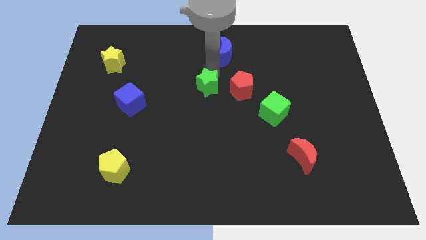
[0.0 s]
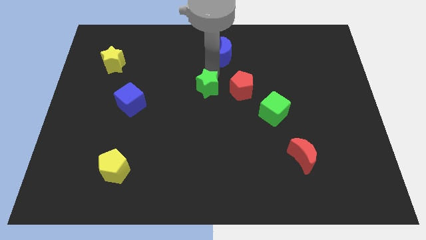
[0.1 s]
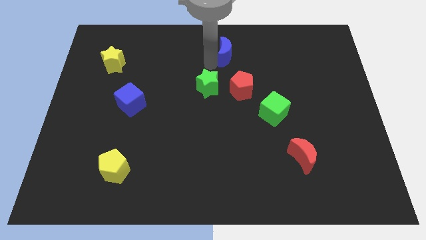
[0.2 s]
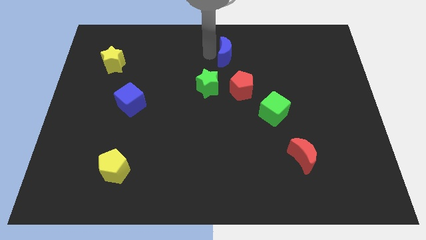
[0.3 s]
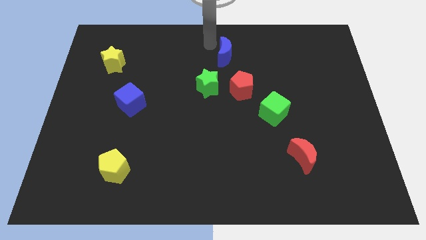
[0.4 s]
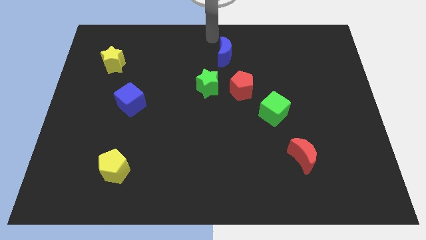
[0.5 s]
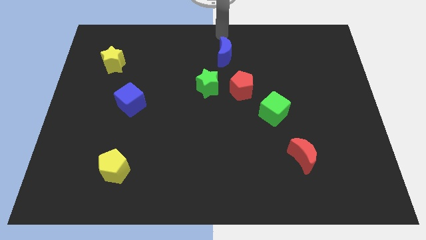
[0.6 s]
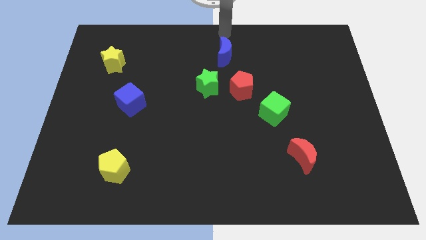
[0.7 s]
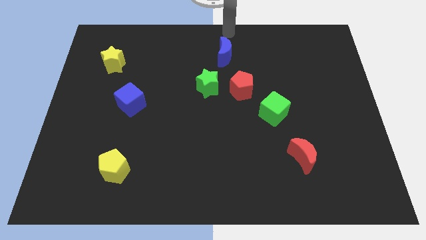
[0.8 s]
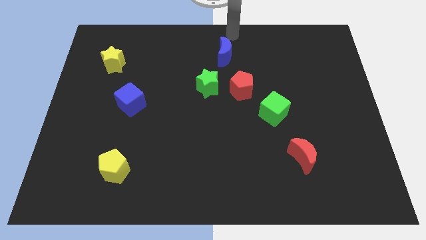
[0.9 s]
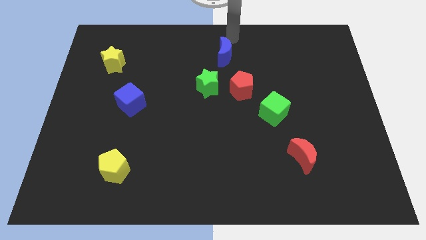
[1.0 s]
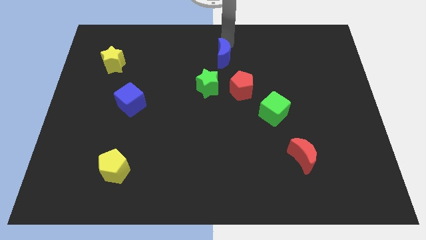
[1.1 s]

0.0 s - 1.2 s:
move your arm above the blue moon

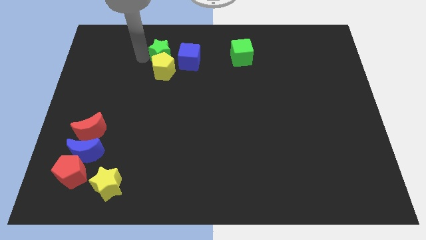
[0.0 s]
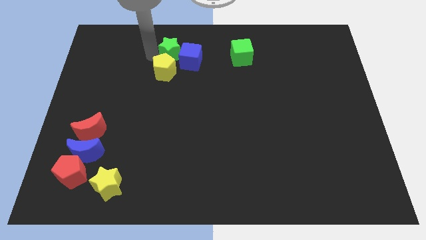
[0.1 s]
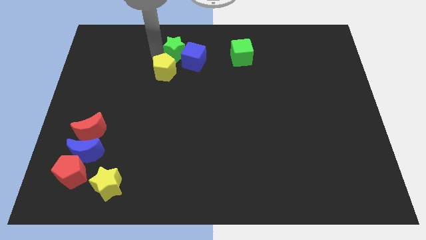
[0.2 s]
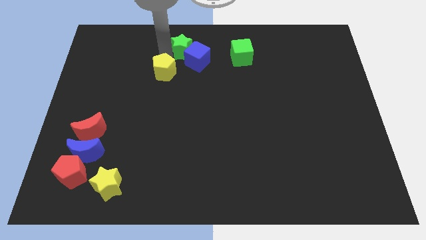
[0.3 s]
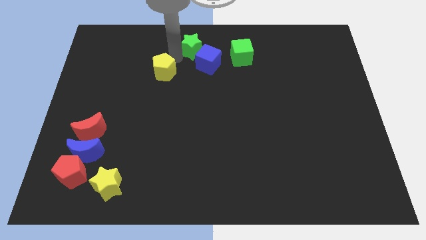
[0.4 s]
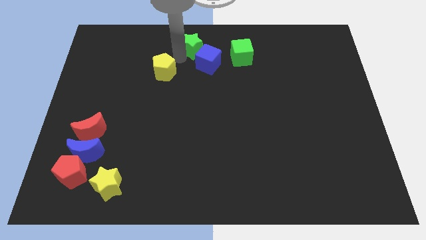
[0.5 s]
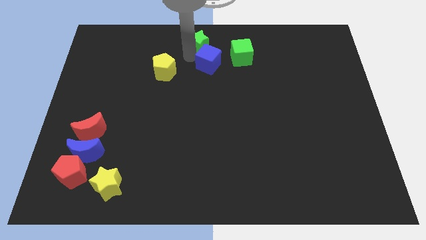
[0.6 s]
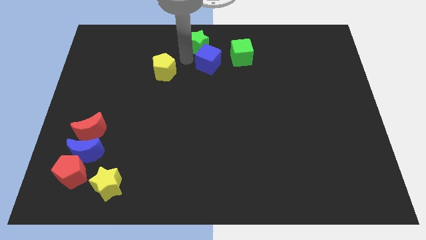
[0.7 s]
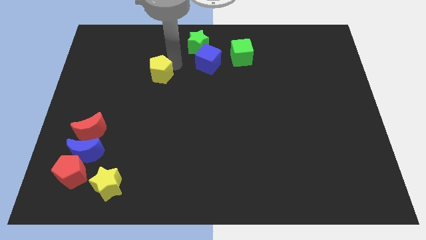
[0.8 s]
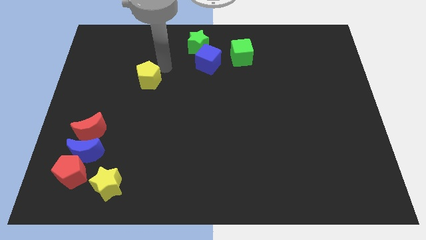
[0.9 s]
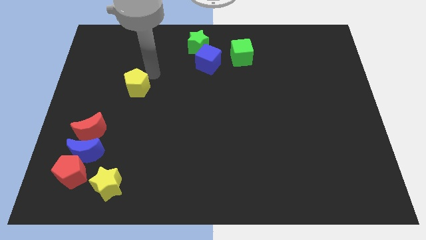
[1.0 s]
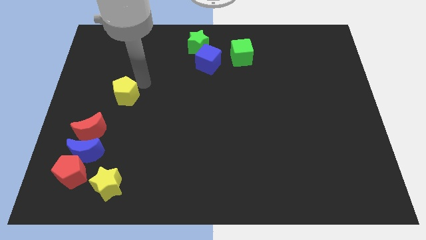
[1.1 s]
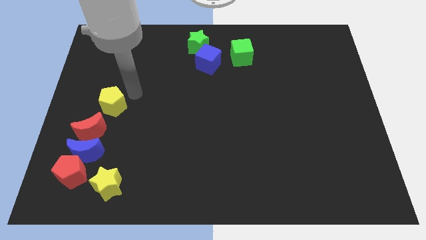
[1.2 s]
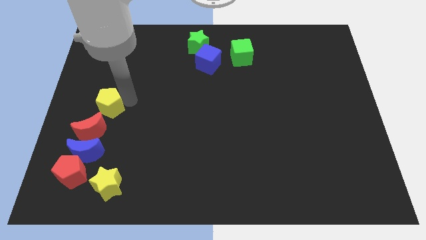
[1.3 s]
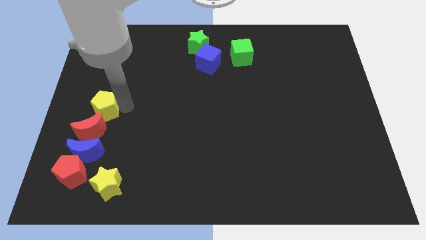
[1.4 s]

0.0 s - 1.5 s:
move the yellow pentagon above the red moon

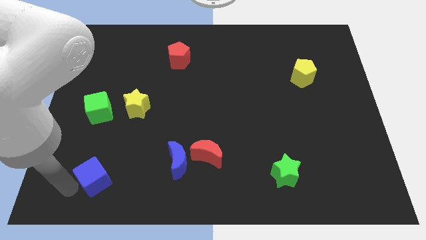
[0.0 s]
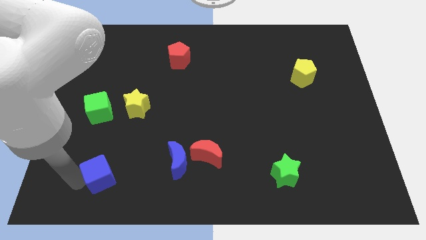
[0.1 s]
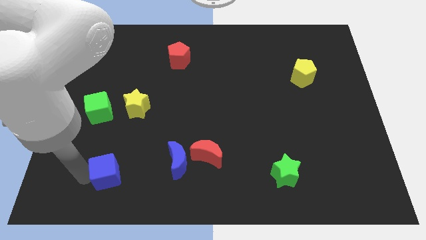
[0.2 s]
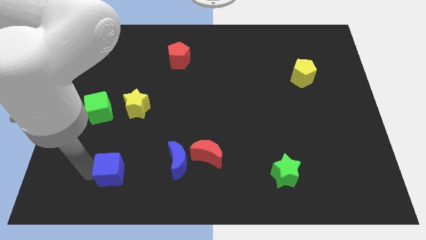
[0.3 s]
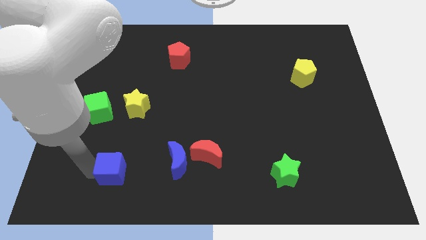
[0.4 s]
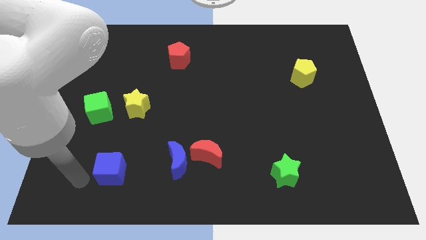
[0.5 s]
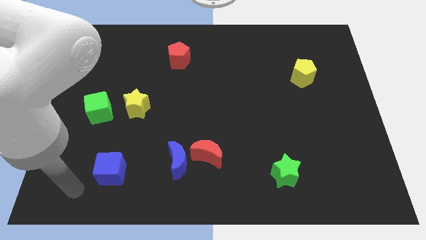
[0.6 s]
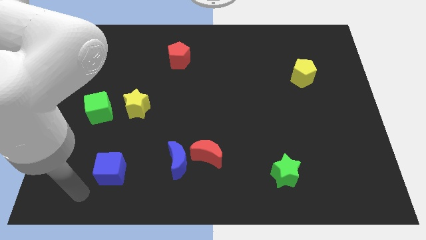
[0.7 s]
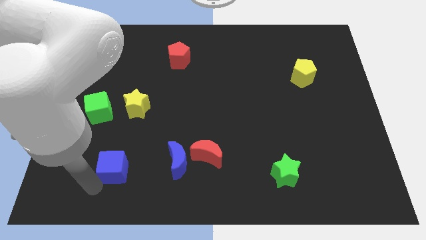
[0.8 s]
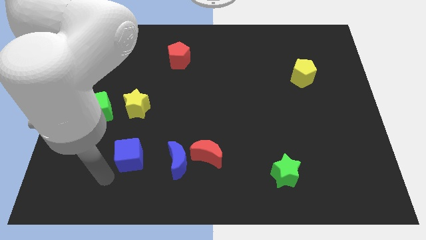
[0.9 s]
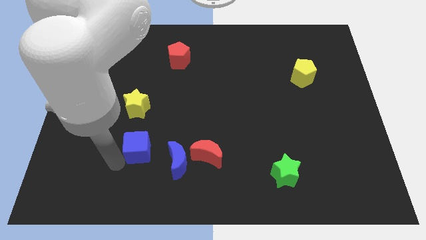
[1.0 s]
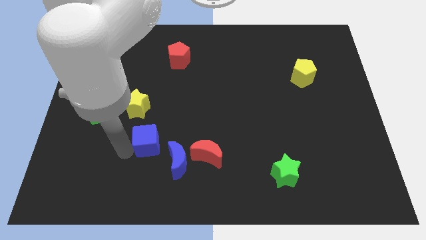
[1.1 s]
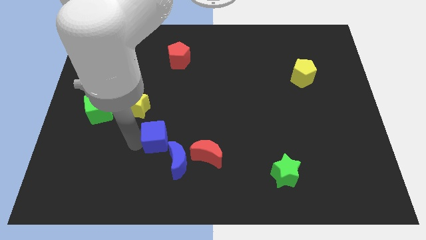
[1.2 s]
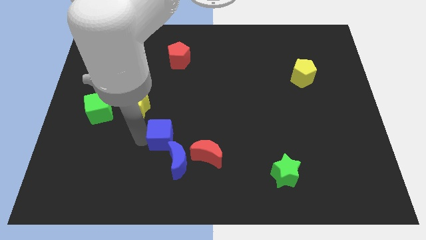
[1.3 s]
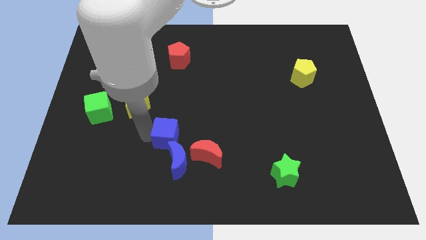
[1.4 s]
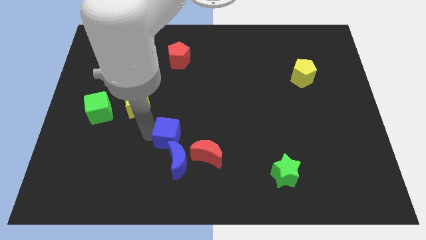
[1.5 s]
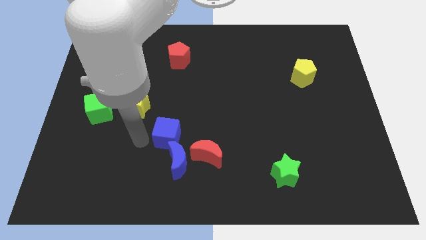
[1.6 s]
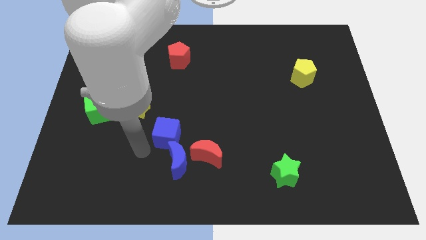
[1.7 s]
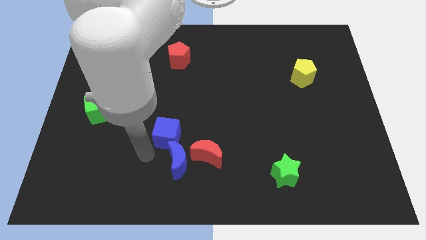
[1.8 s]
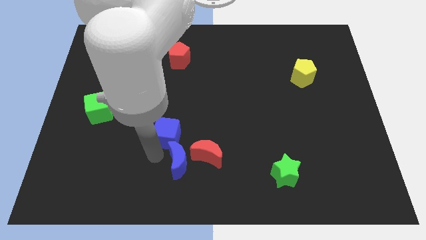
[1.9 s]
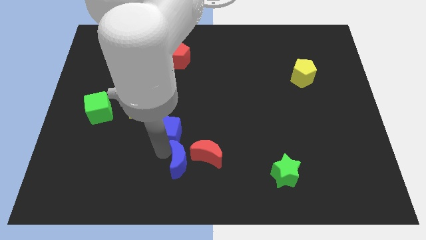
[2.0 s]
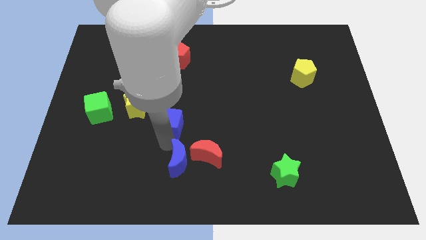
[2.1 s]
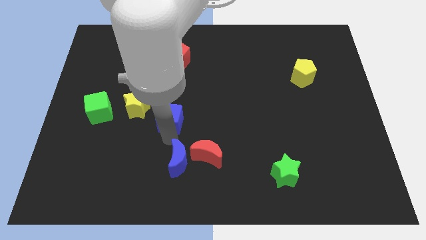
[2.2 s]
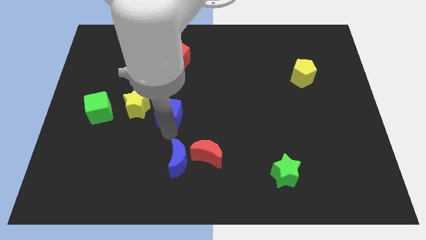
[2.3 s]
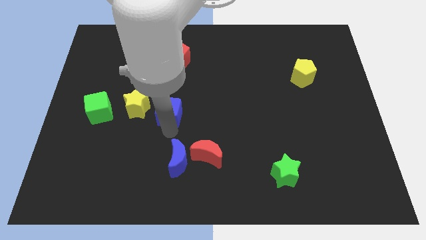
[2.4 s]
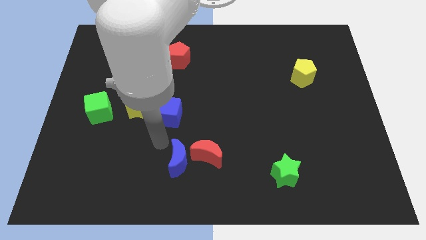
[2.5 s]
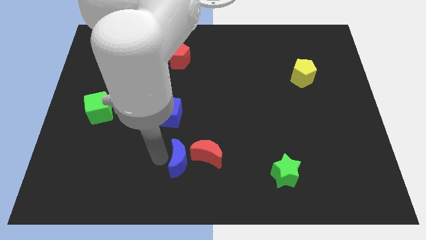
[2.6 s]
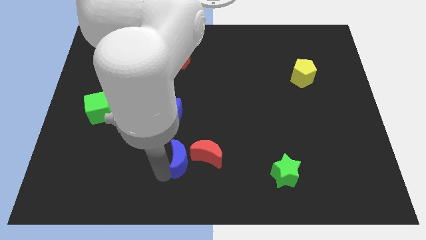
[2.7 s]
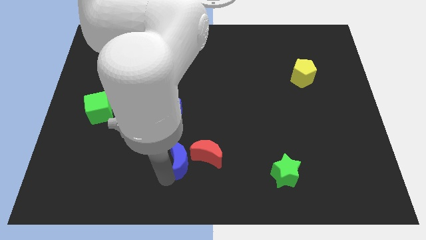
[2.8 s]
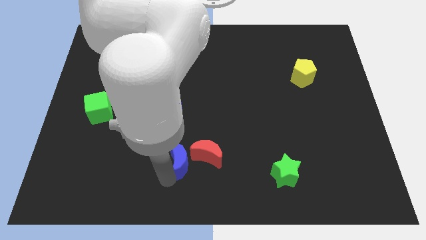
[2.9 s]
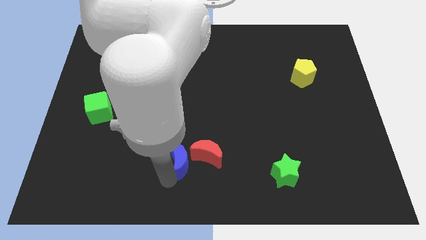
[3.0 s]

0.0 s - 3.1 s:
push the blue cube to the right of yellow star

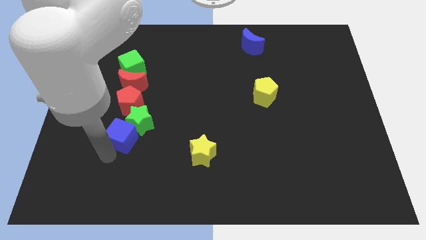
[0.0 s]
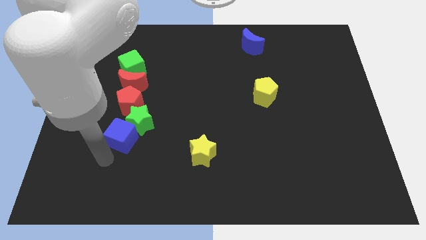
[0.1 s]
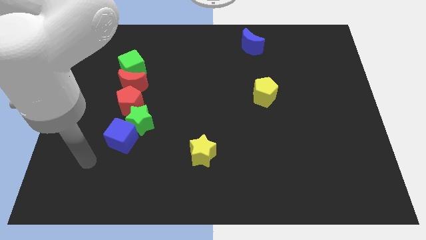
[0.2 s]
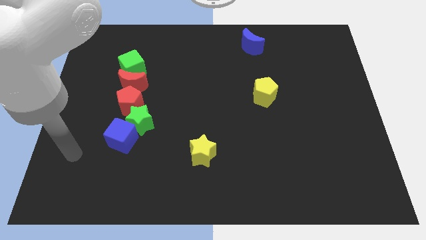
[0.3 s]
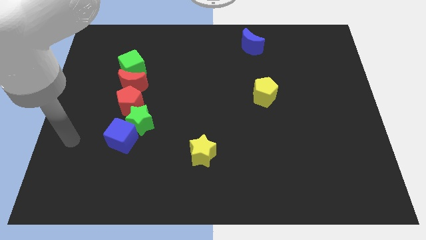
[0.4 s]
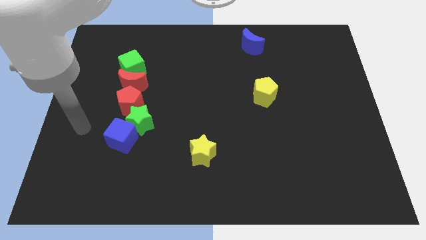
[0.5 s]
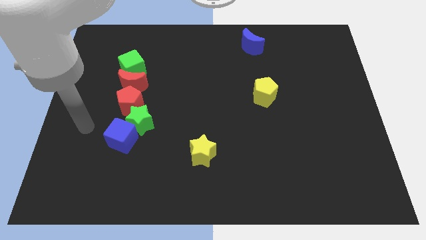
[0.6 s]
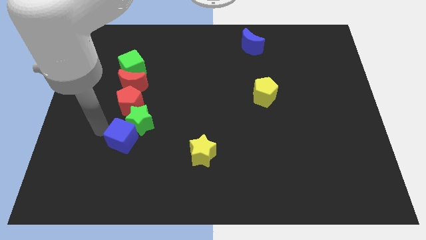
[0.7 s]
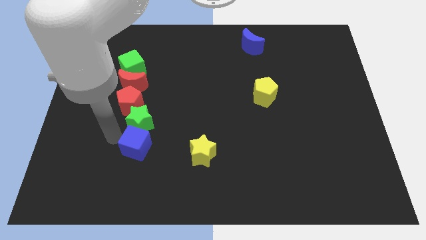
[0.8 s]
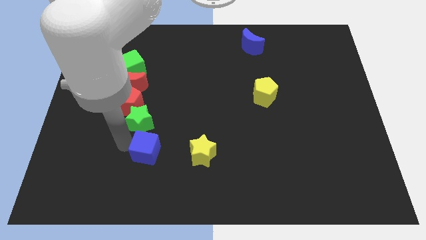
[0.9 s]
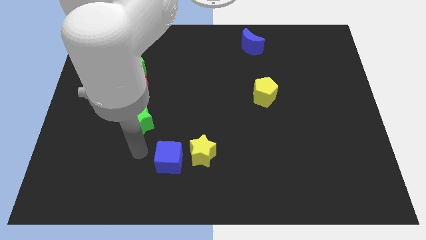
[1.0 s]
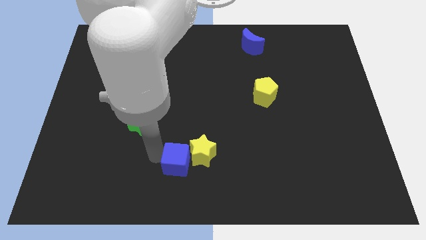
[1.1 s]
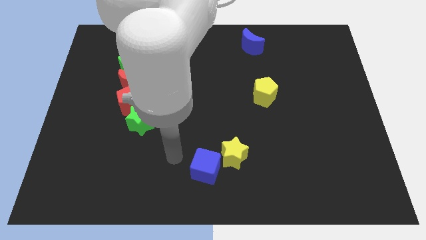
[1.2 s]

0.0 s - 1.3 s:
put the blue cube into the yellow star

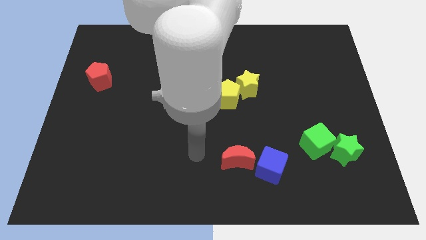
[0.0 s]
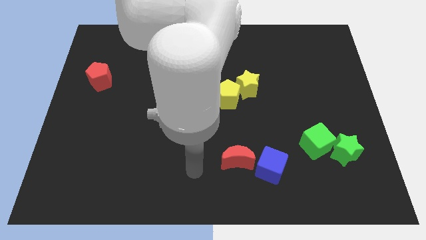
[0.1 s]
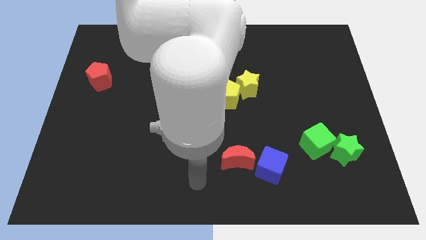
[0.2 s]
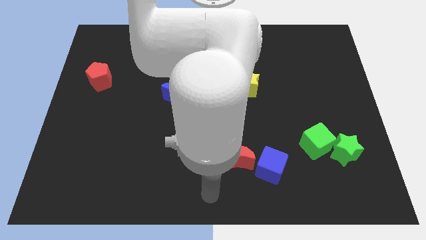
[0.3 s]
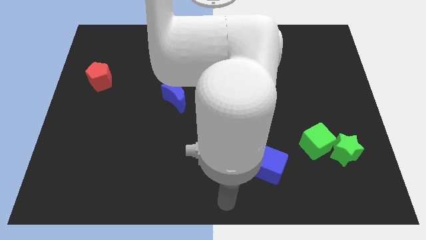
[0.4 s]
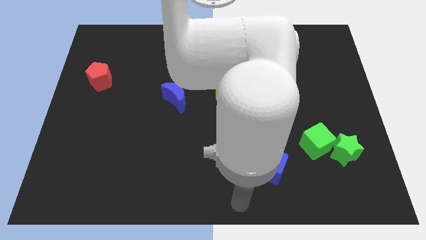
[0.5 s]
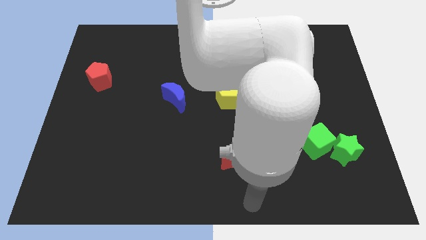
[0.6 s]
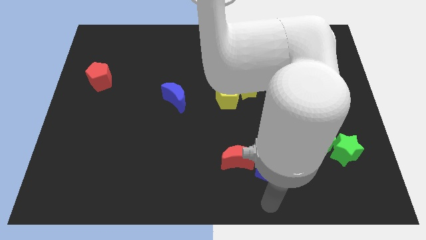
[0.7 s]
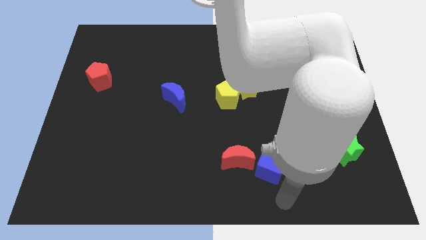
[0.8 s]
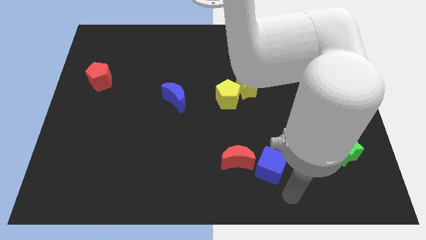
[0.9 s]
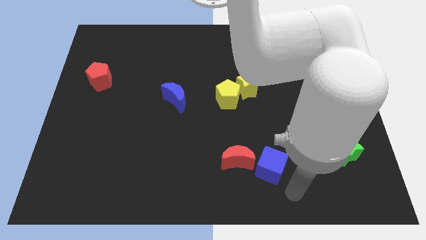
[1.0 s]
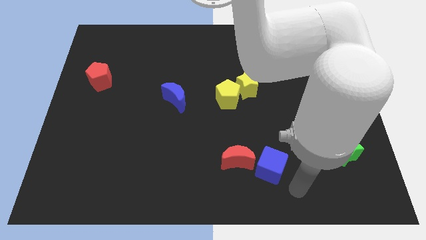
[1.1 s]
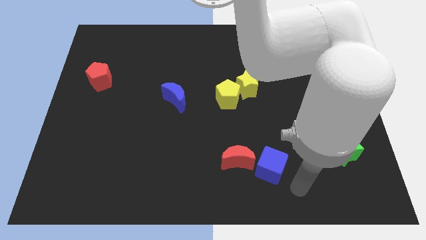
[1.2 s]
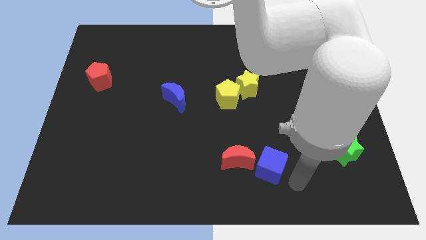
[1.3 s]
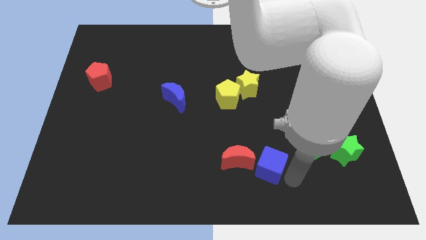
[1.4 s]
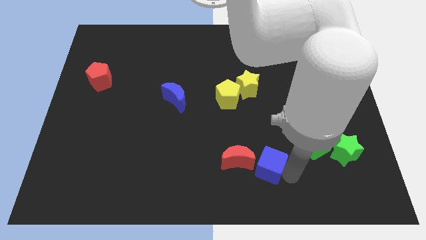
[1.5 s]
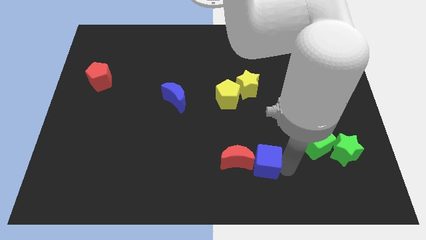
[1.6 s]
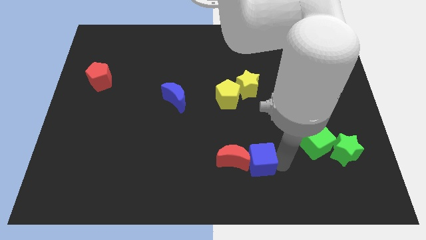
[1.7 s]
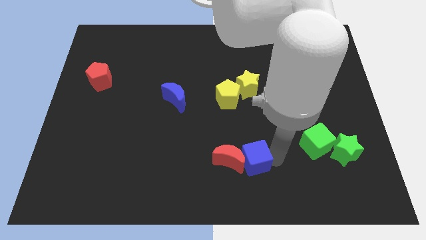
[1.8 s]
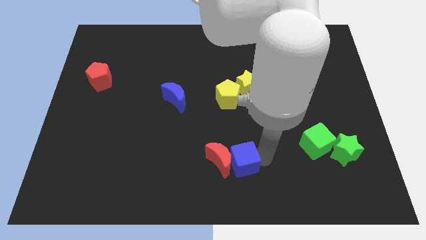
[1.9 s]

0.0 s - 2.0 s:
move the blue cube into the red crescent

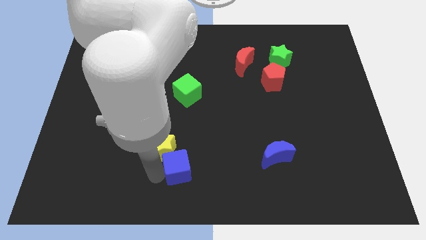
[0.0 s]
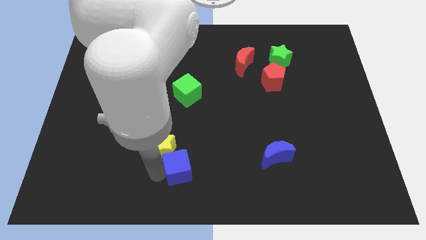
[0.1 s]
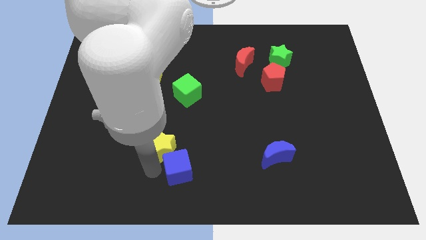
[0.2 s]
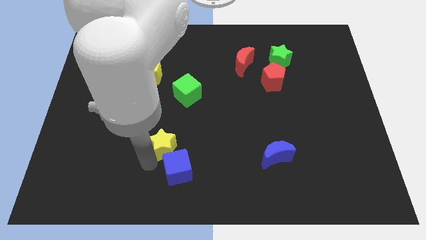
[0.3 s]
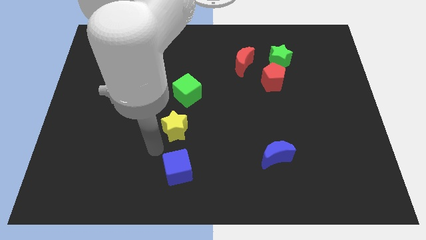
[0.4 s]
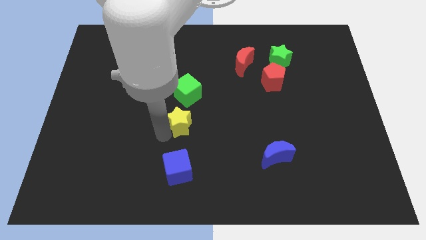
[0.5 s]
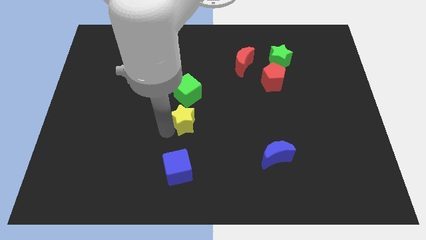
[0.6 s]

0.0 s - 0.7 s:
place the yellow star in between the green cube and blue cube